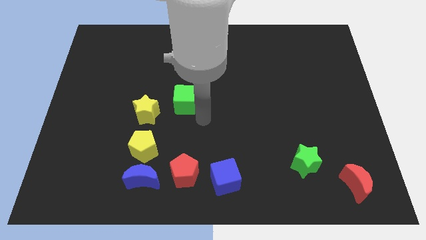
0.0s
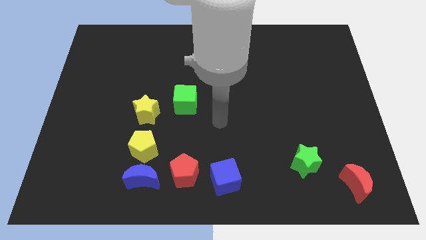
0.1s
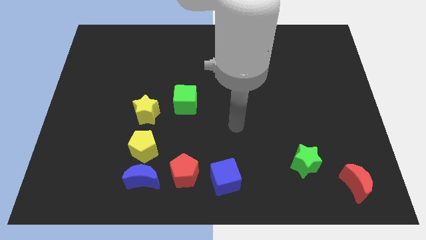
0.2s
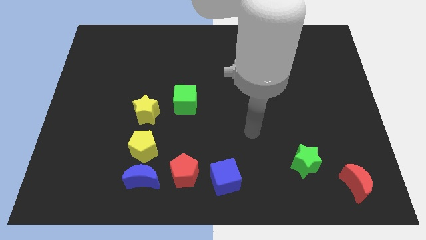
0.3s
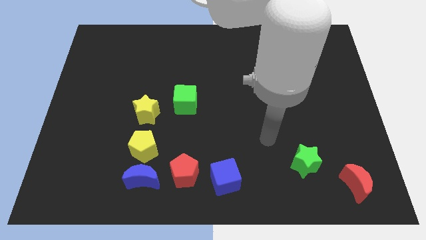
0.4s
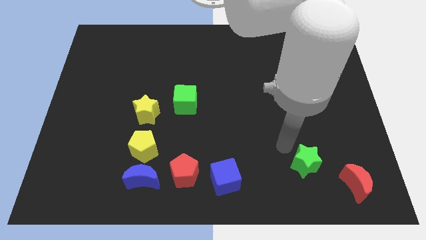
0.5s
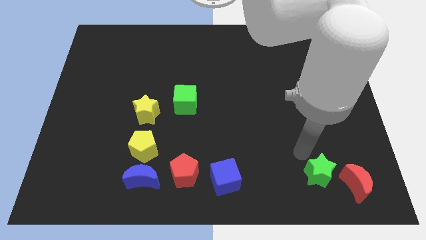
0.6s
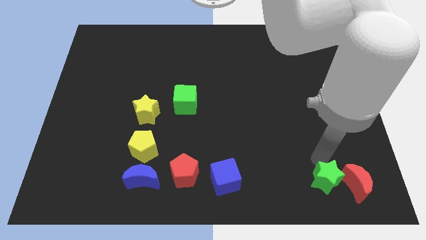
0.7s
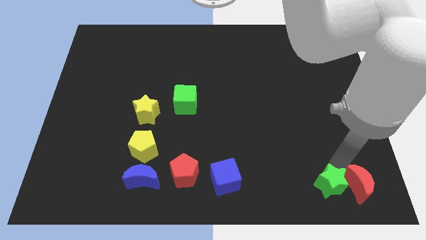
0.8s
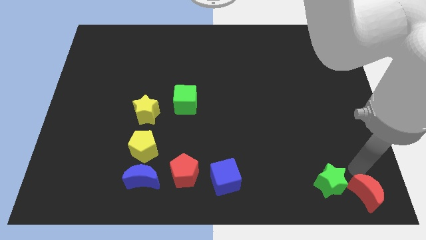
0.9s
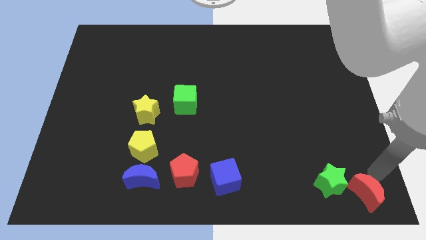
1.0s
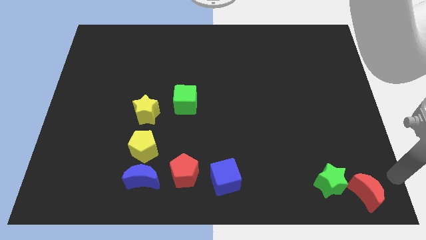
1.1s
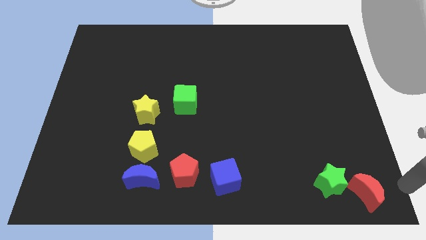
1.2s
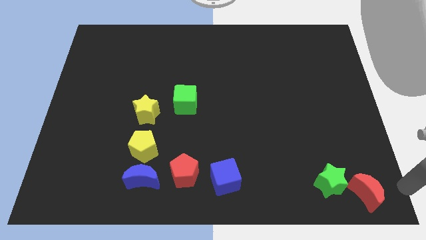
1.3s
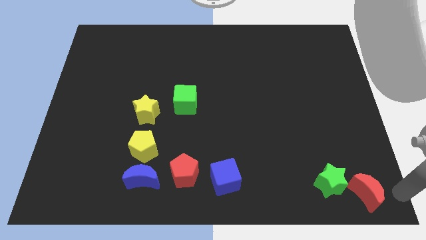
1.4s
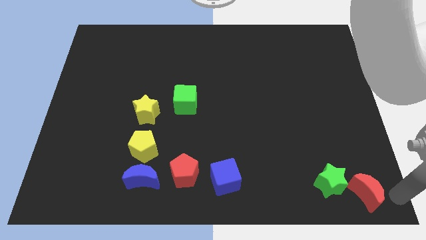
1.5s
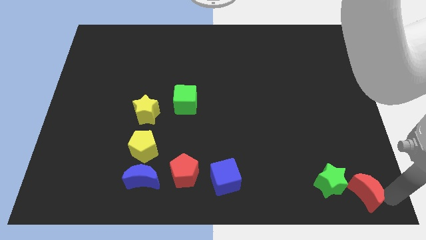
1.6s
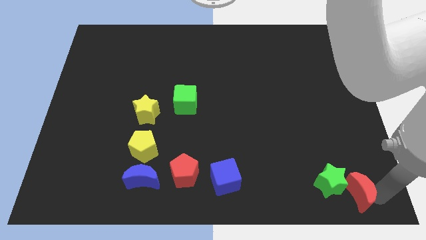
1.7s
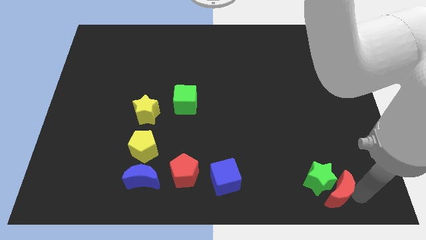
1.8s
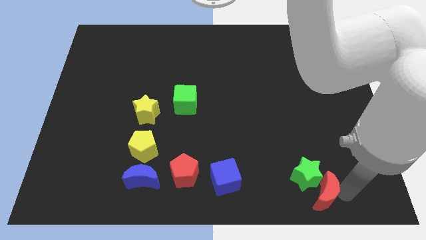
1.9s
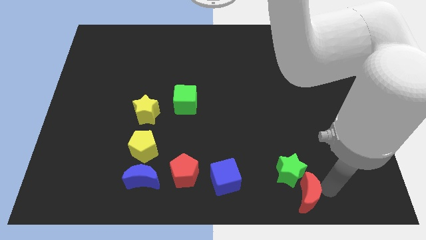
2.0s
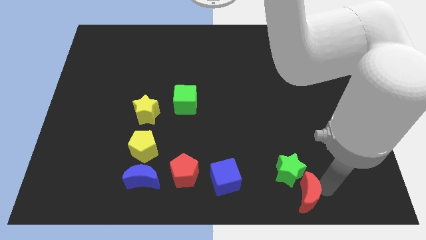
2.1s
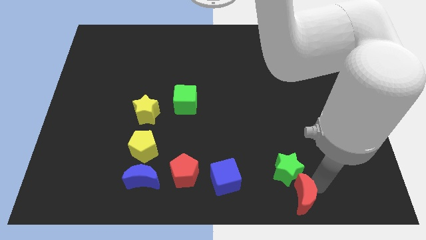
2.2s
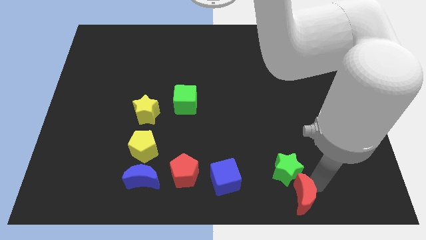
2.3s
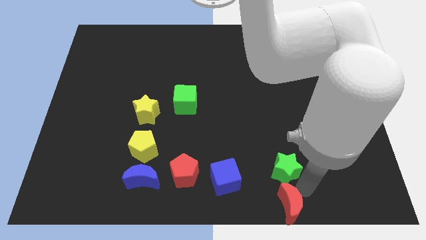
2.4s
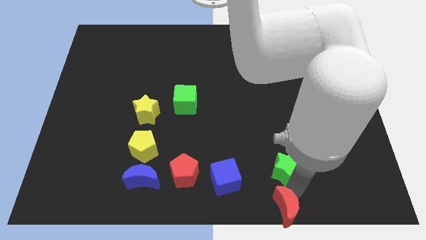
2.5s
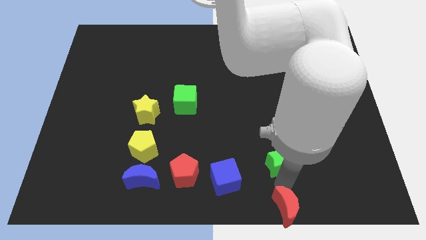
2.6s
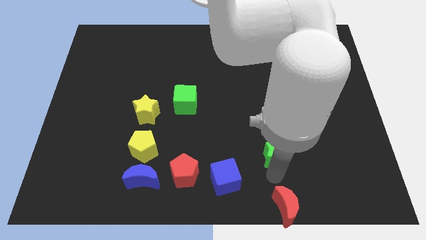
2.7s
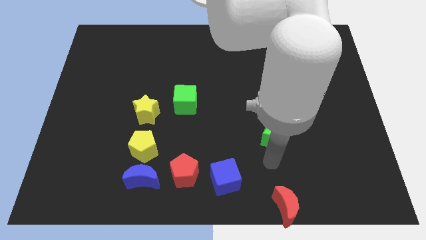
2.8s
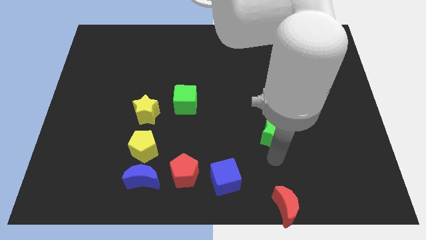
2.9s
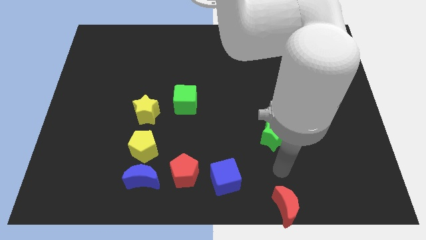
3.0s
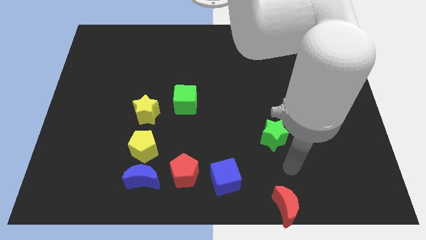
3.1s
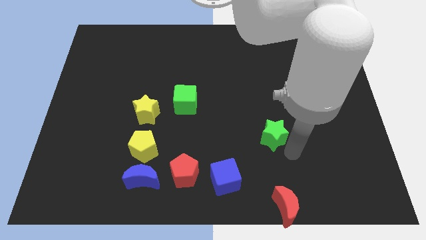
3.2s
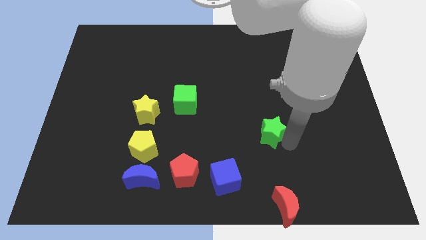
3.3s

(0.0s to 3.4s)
put the green star and red crescent vertical to each other

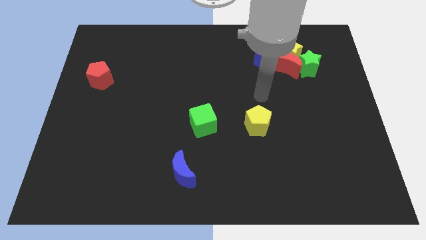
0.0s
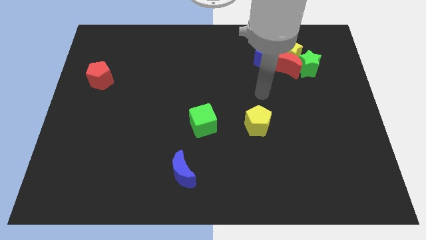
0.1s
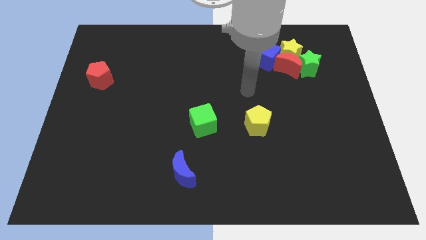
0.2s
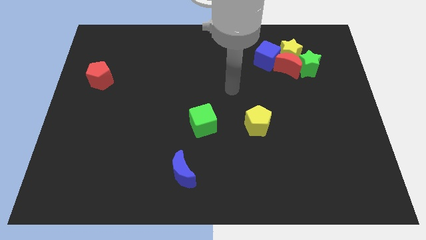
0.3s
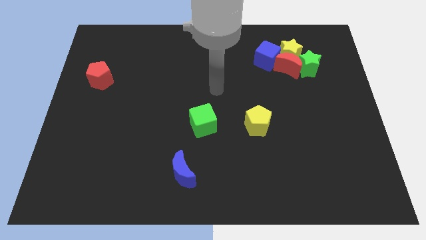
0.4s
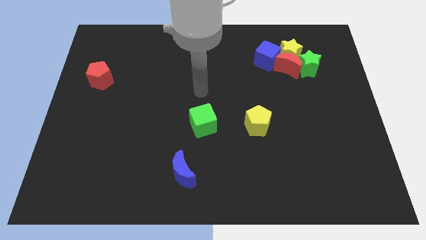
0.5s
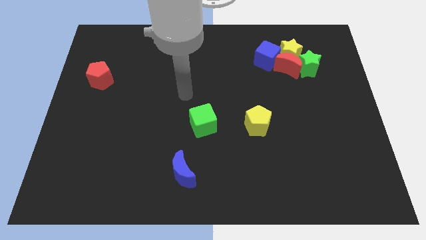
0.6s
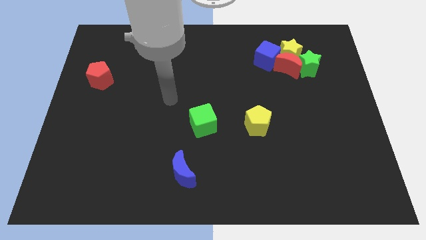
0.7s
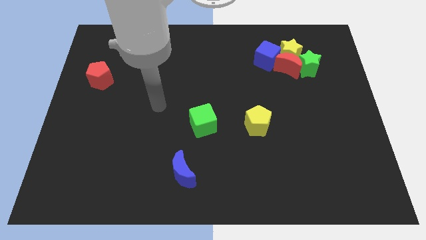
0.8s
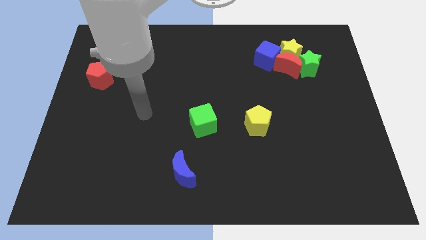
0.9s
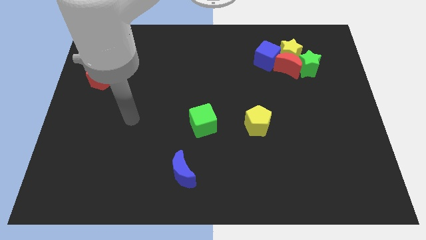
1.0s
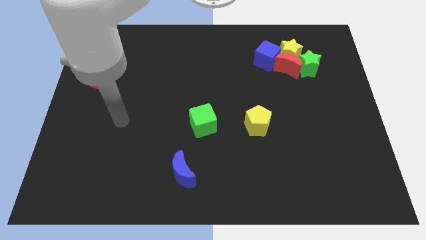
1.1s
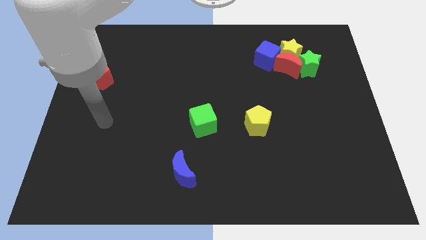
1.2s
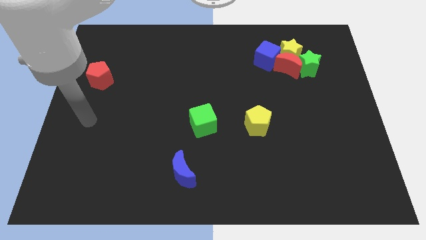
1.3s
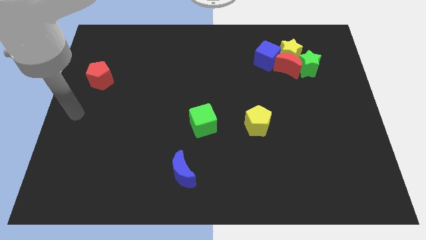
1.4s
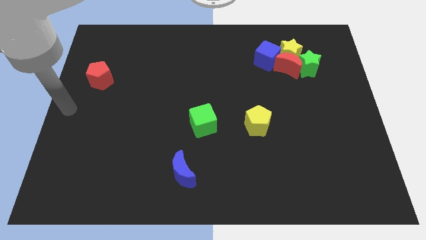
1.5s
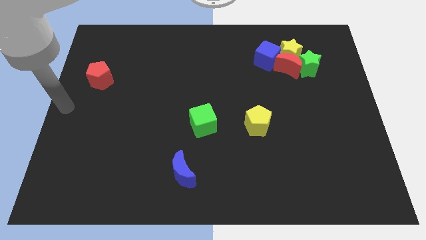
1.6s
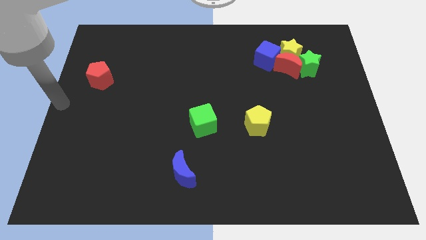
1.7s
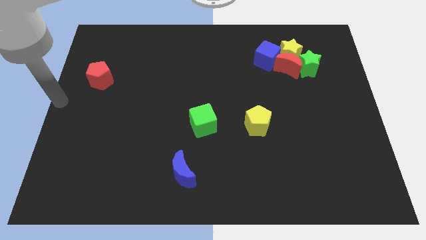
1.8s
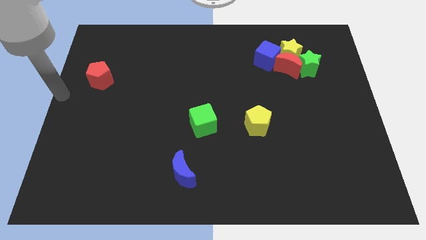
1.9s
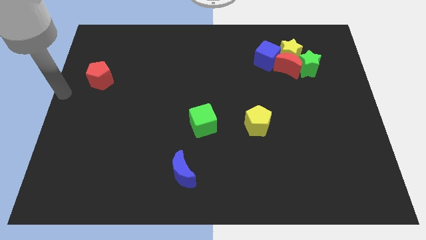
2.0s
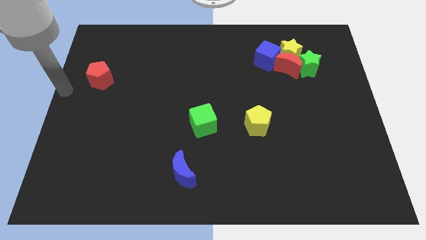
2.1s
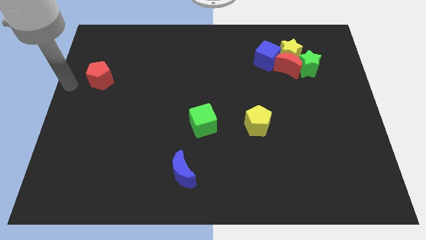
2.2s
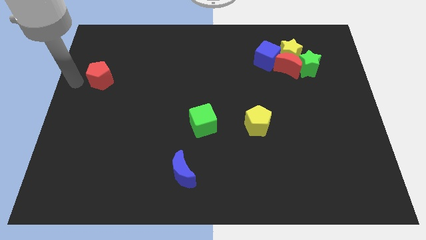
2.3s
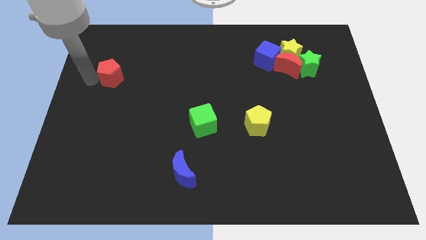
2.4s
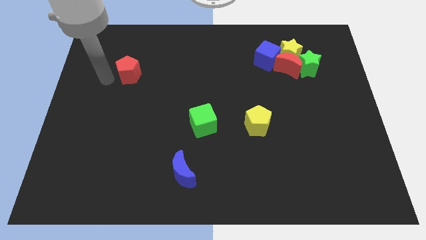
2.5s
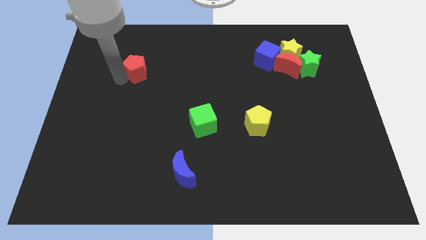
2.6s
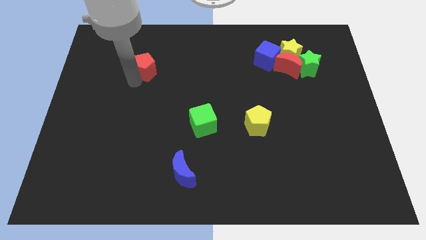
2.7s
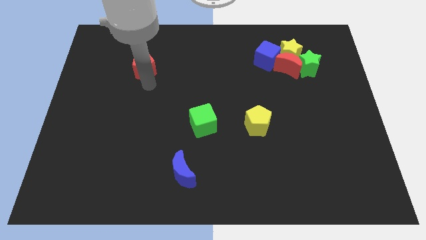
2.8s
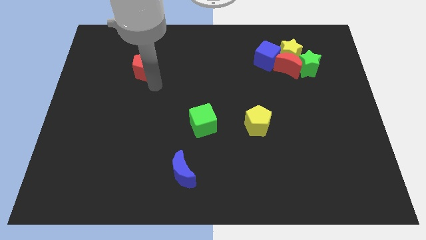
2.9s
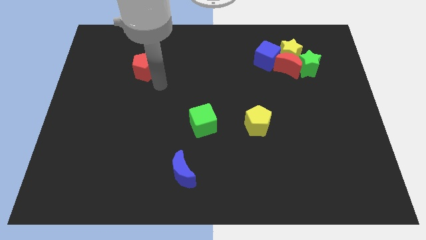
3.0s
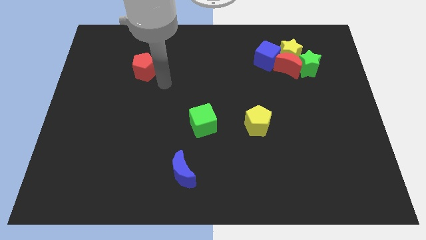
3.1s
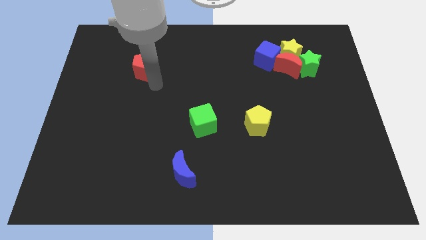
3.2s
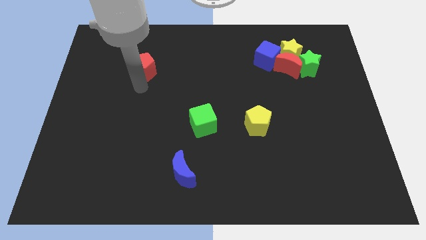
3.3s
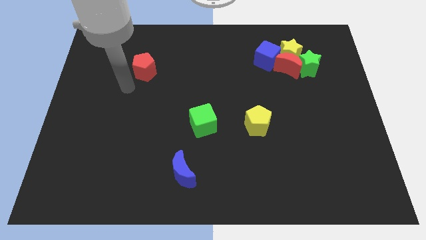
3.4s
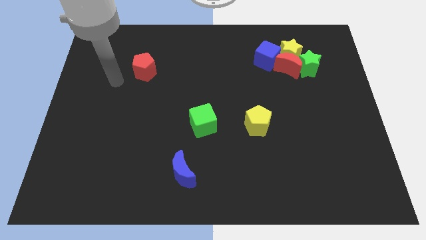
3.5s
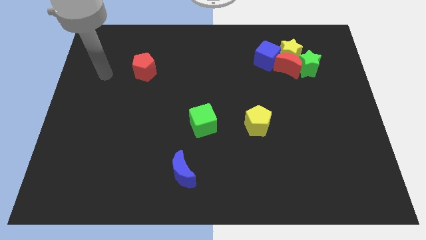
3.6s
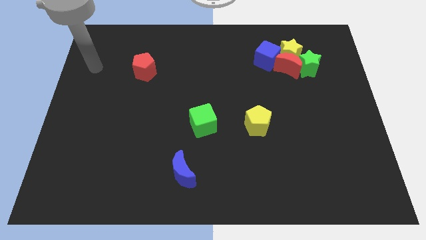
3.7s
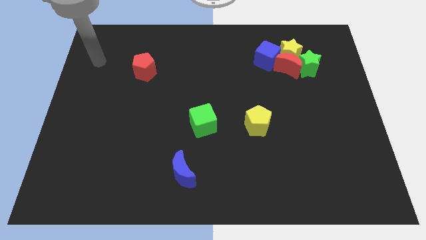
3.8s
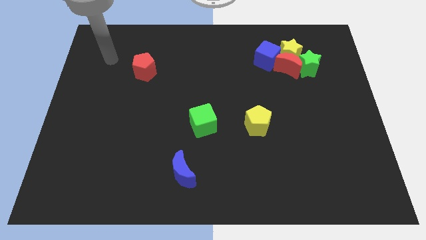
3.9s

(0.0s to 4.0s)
push the red pentagon towards the group of blocks

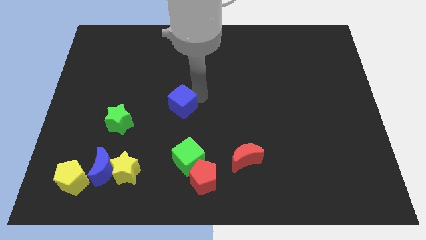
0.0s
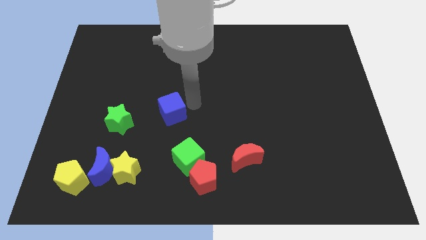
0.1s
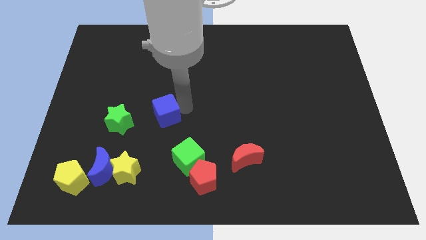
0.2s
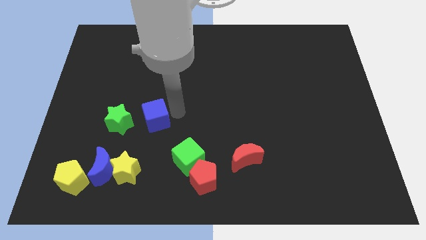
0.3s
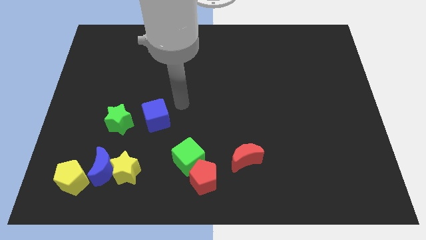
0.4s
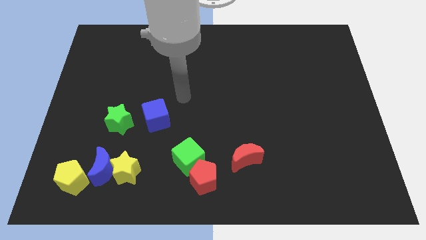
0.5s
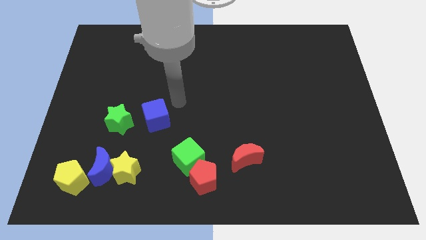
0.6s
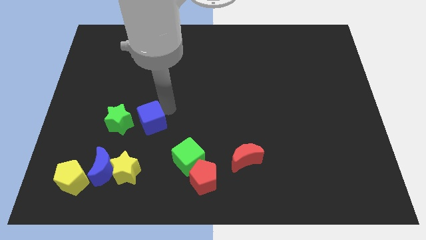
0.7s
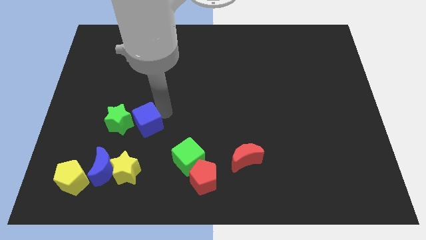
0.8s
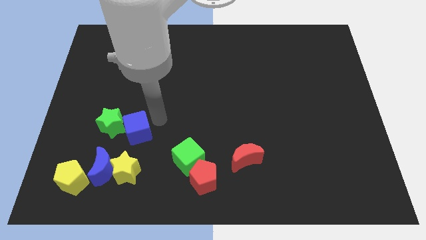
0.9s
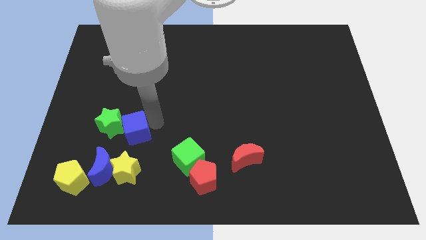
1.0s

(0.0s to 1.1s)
push the blue cube into the right side of the green star

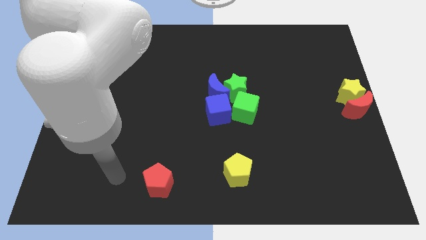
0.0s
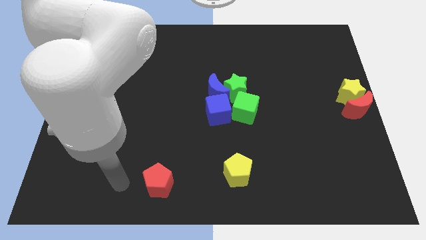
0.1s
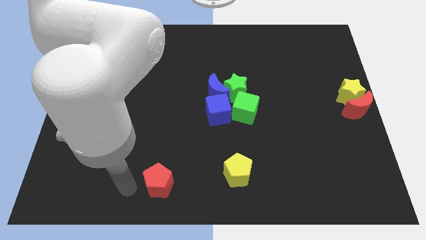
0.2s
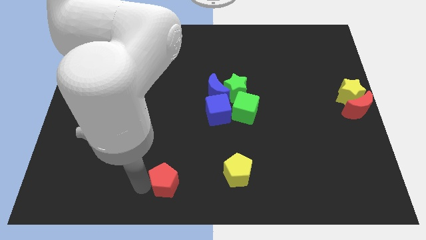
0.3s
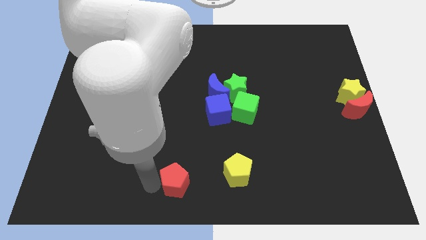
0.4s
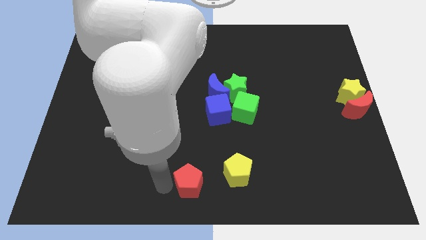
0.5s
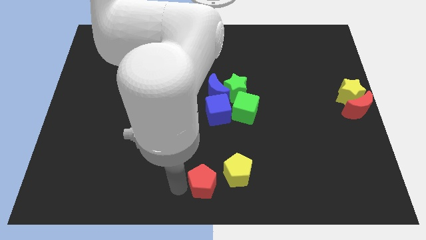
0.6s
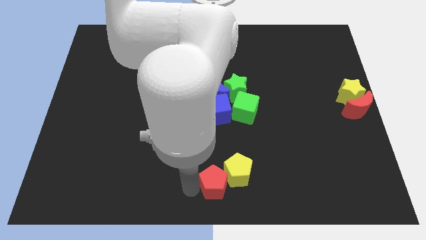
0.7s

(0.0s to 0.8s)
place the red pentagon diagonal to the yellow pentagon at the bottom left side
